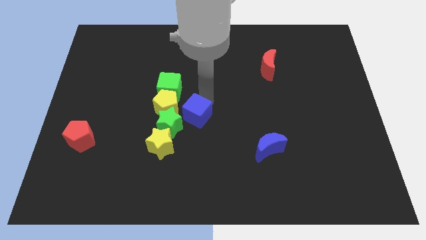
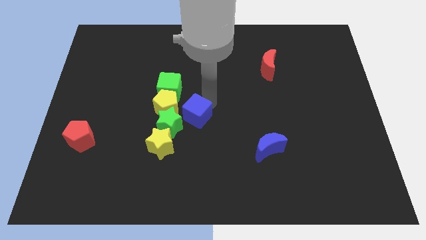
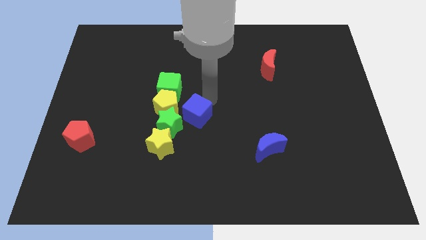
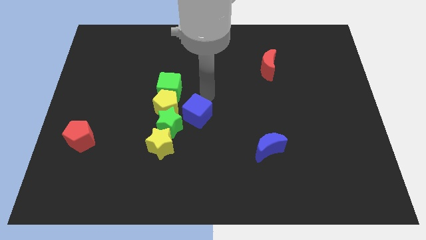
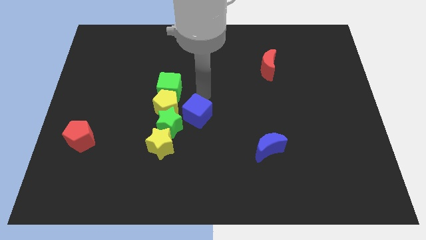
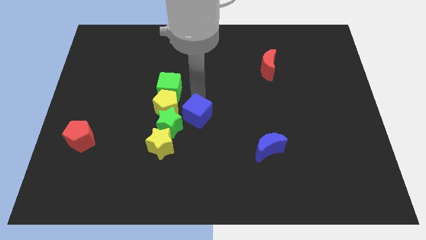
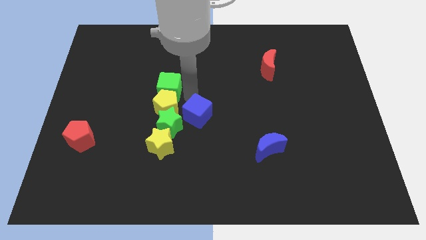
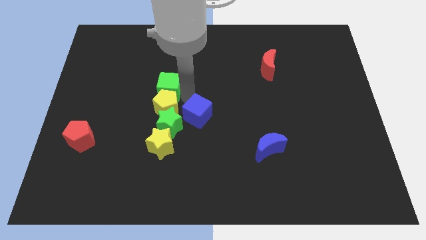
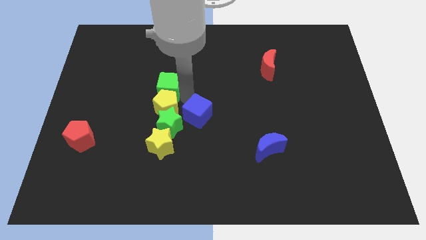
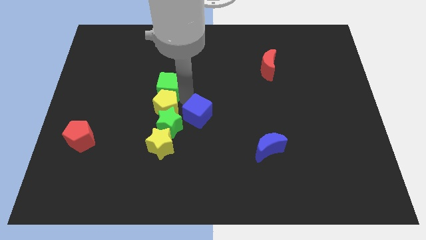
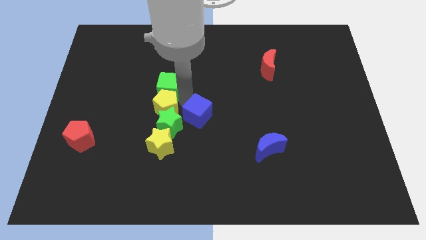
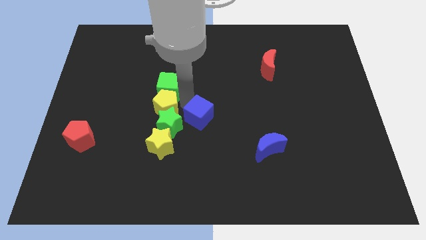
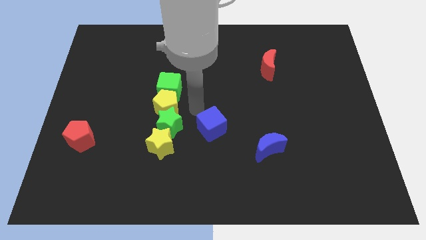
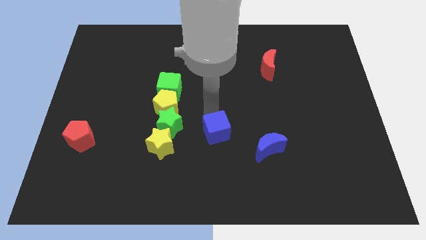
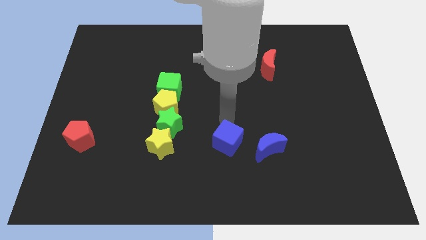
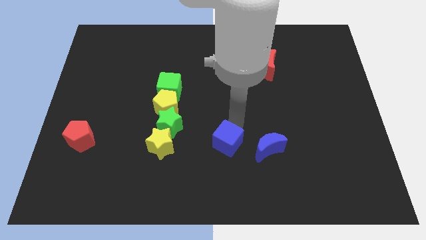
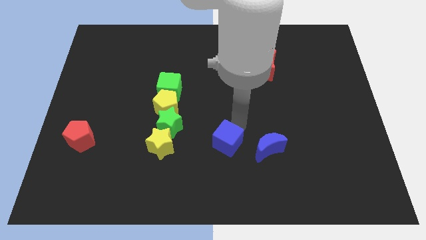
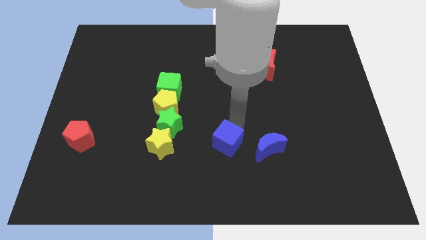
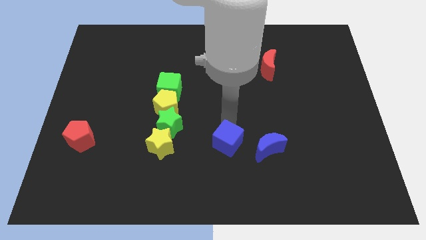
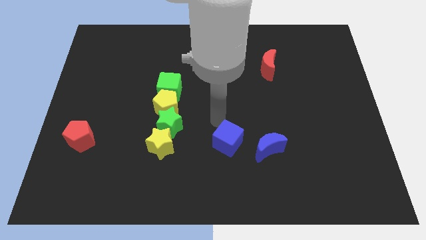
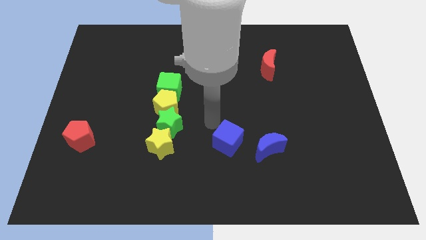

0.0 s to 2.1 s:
push the blue cube left to the blue moon

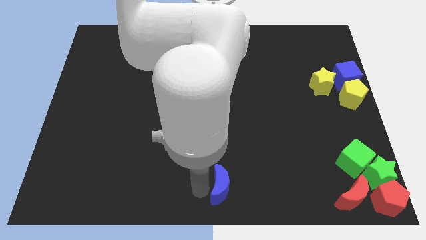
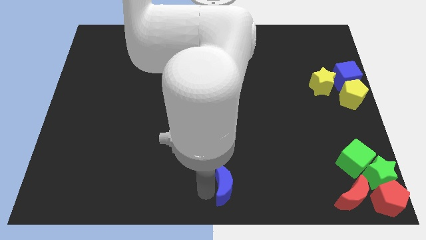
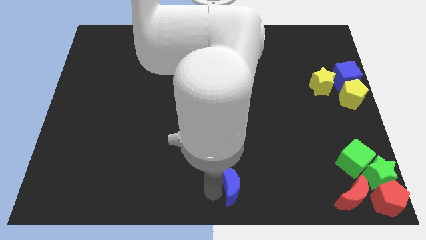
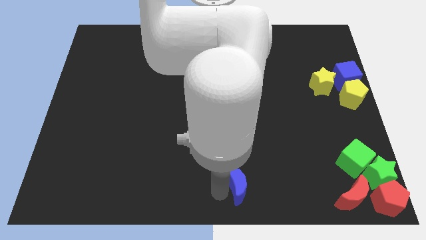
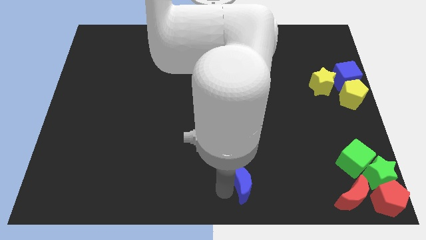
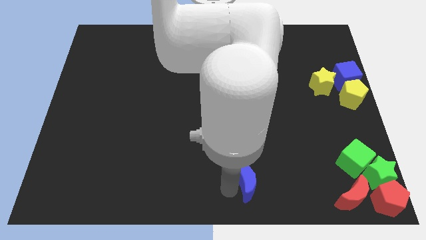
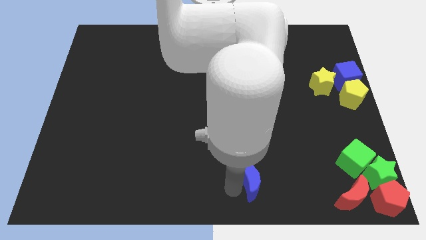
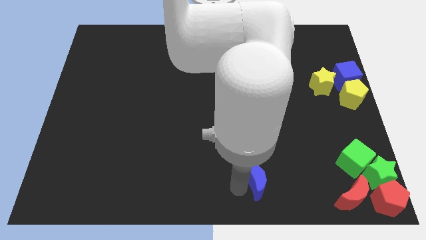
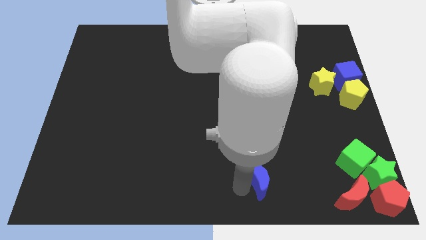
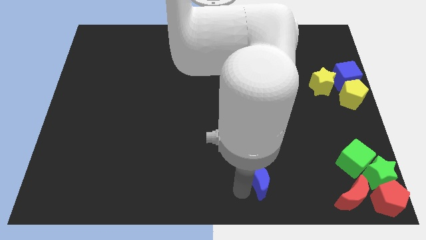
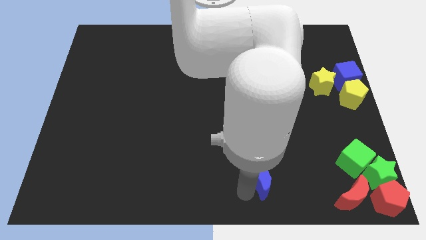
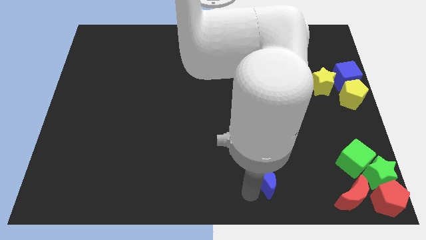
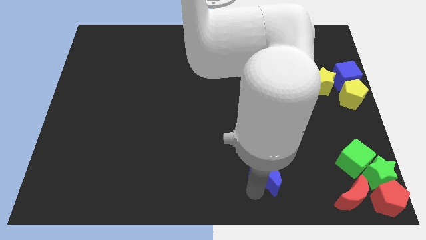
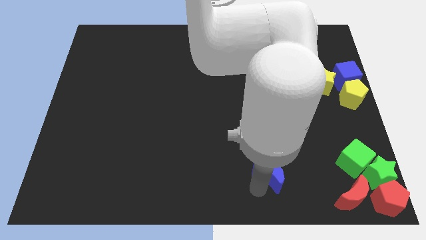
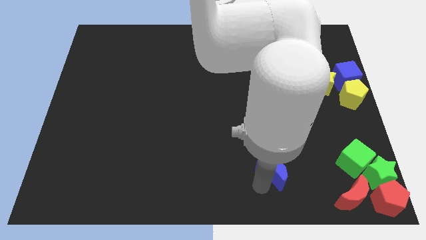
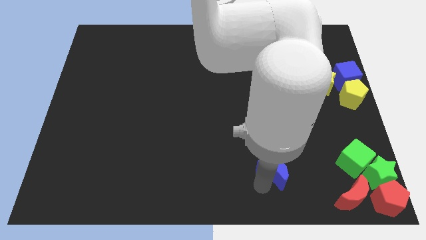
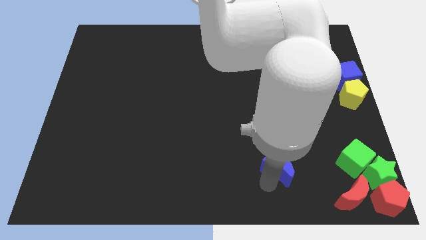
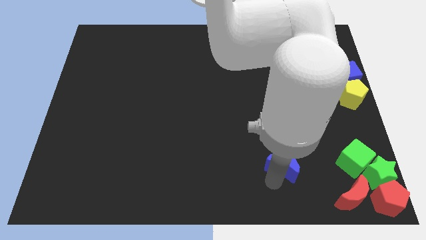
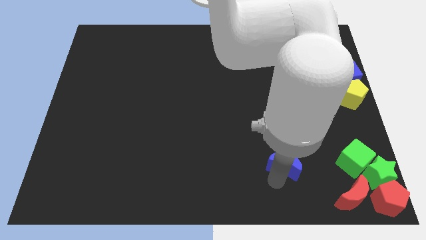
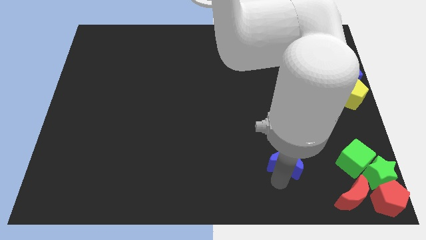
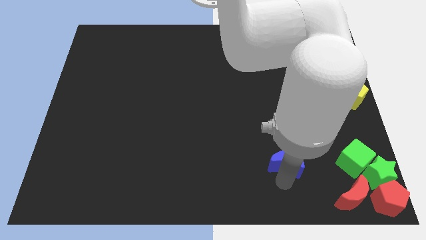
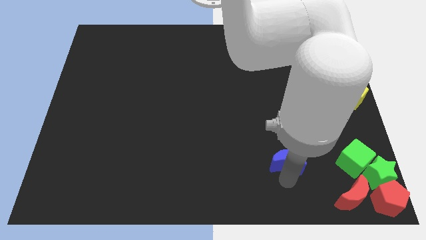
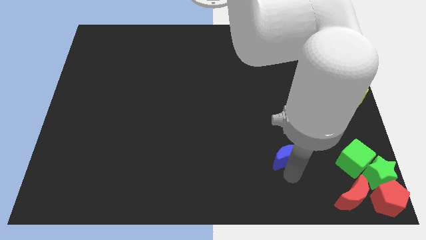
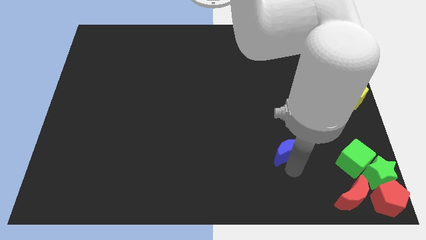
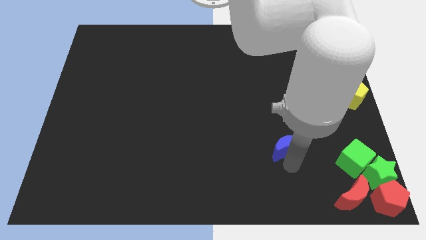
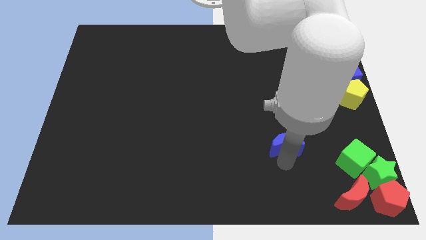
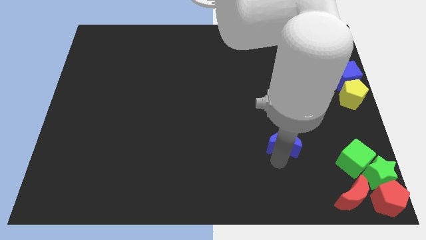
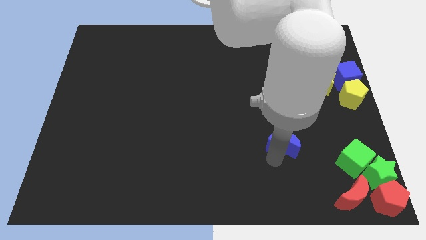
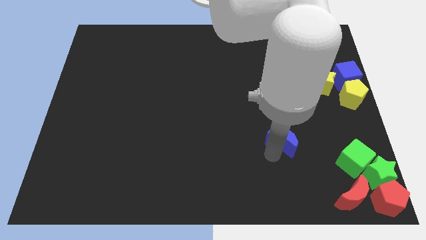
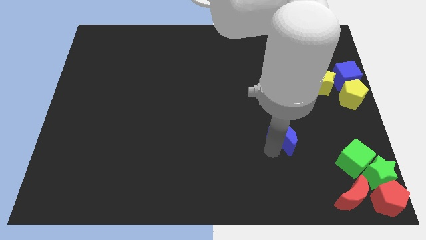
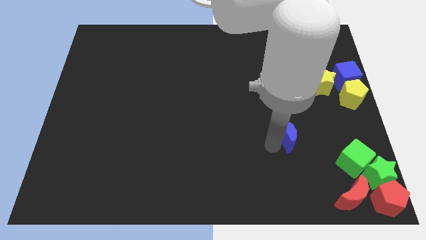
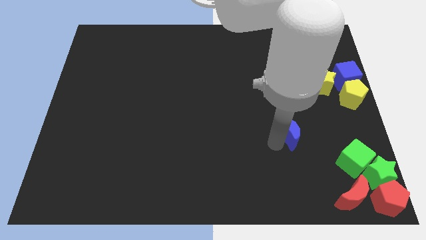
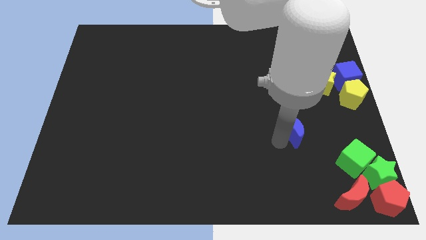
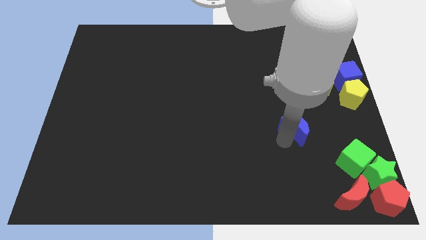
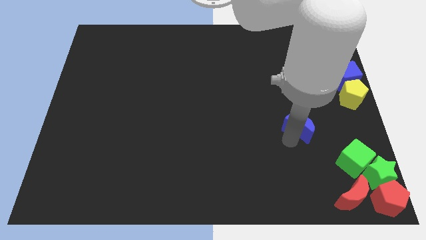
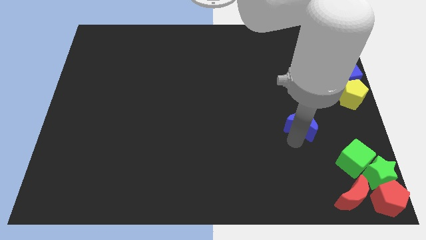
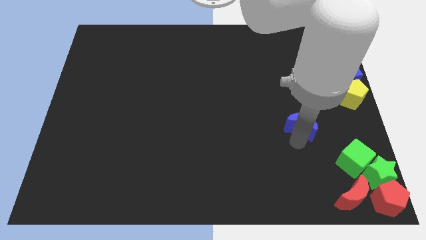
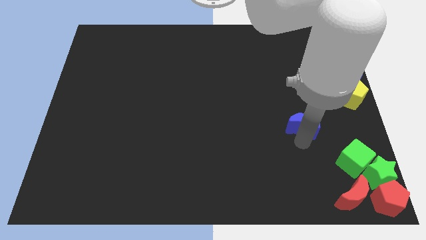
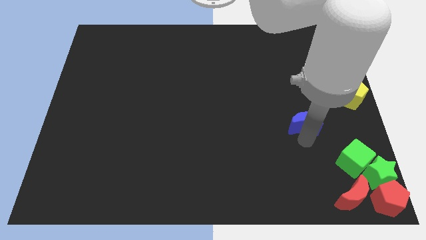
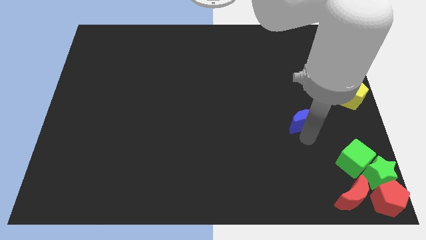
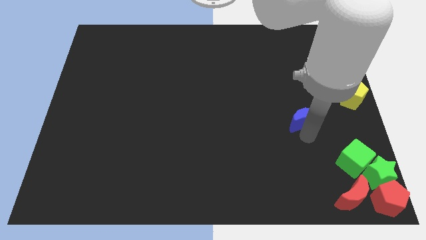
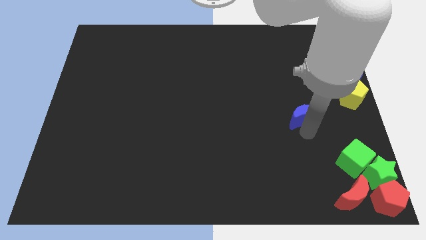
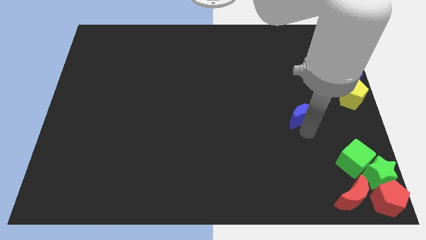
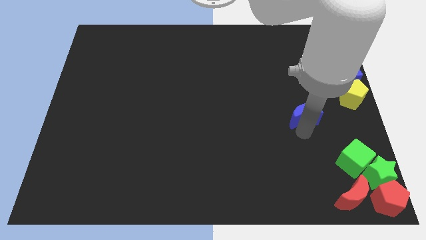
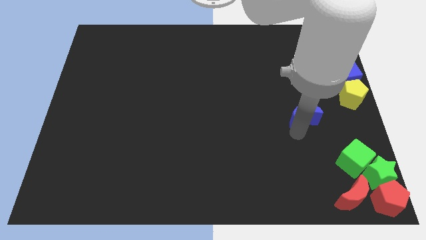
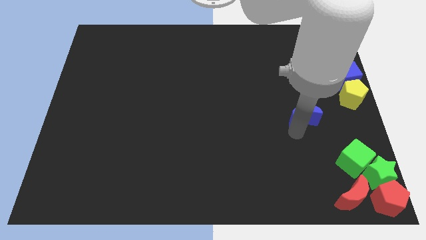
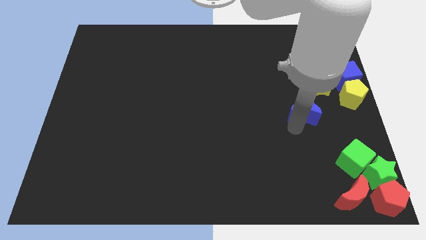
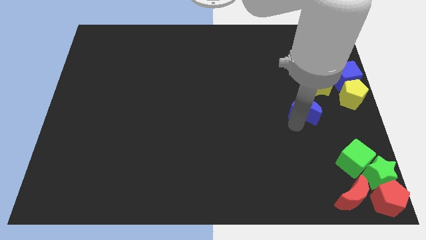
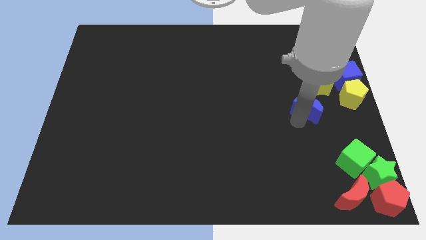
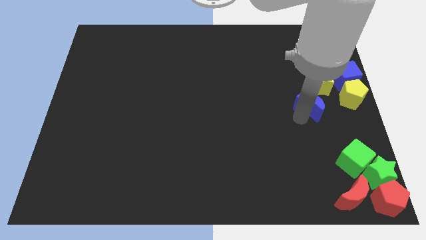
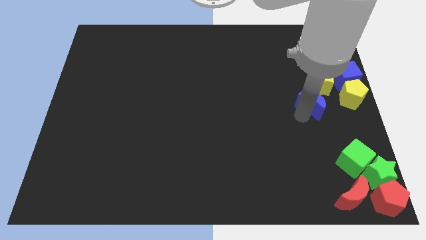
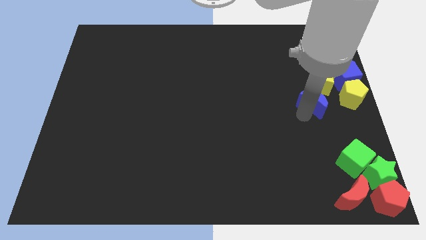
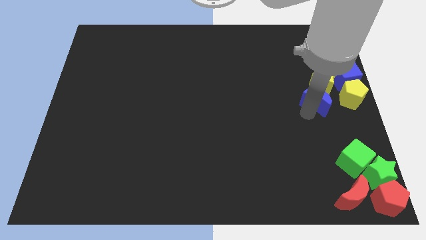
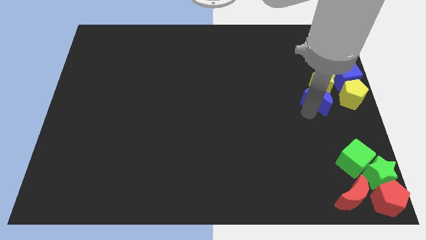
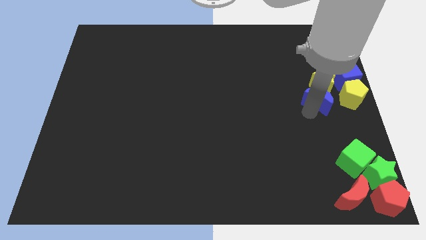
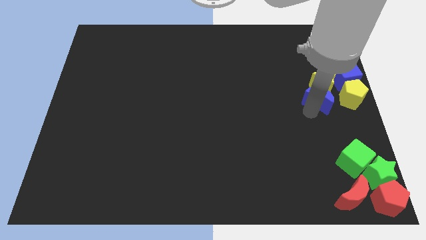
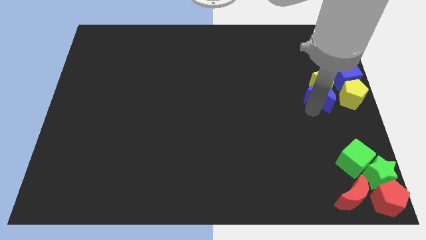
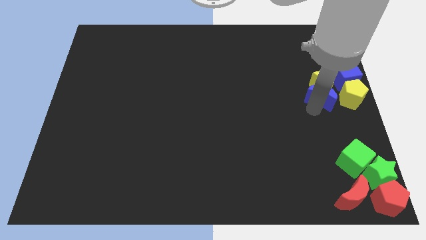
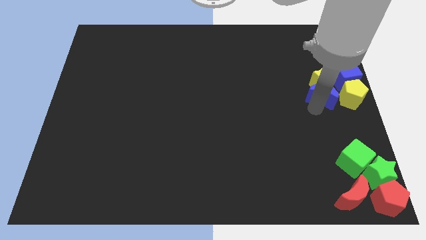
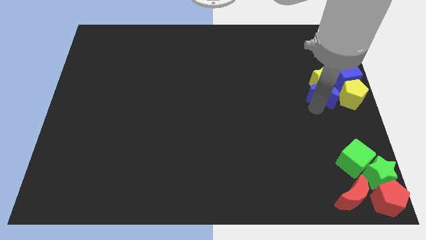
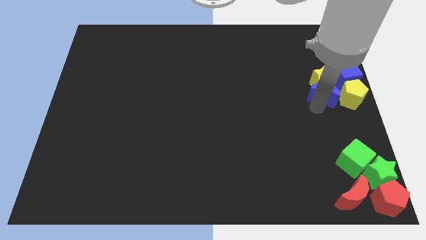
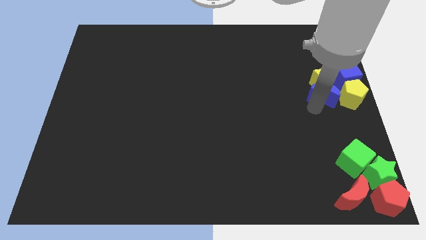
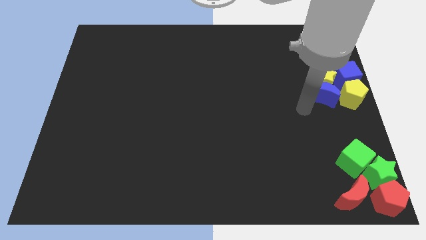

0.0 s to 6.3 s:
move the blue crescent into the bottom of the yellow star

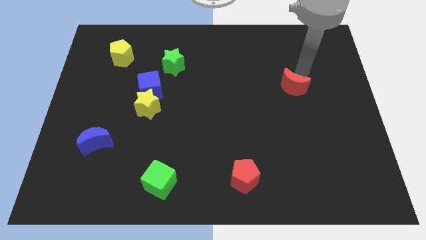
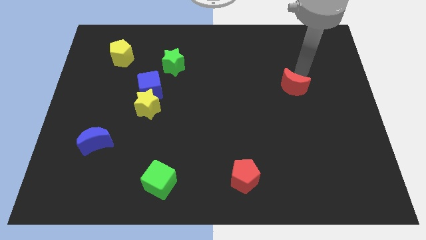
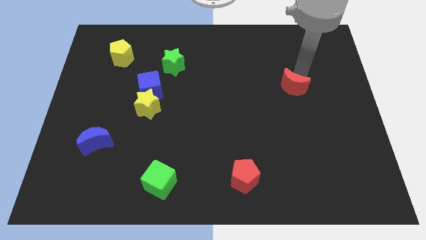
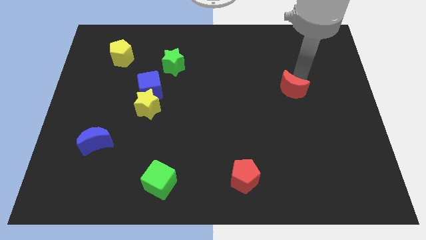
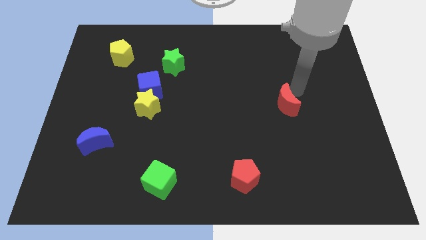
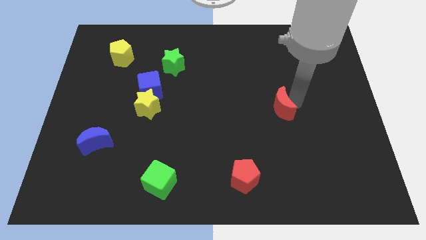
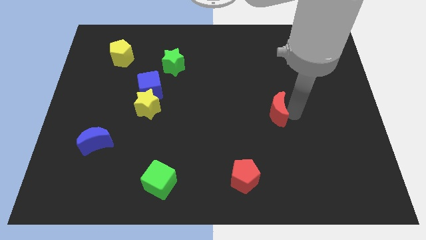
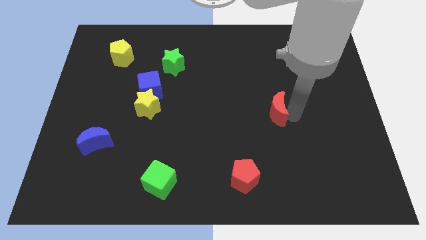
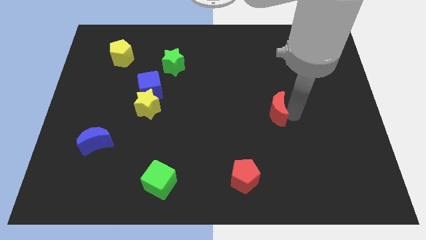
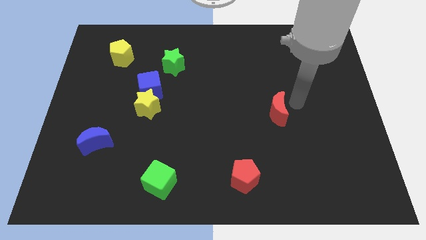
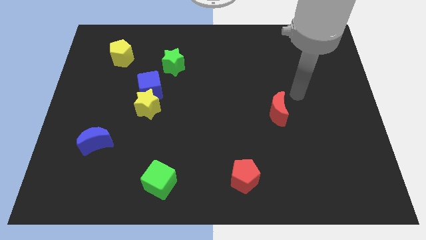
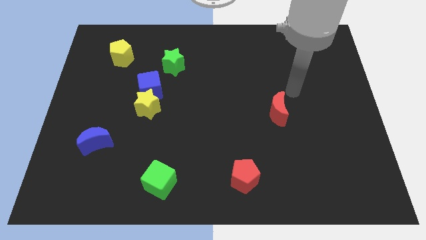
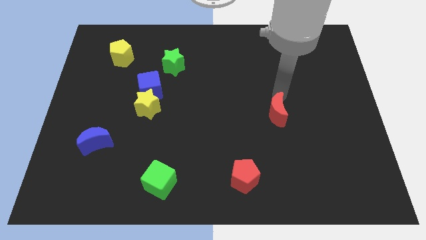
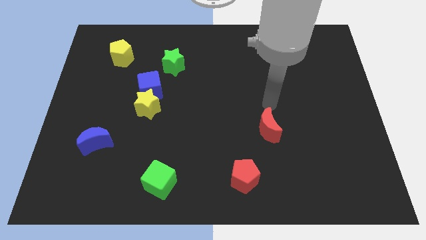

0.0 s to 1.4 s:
place red moon to the top right of the red pentagon
